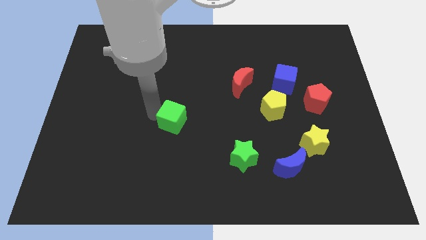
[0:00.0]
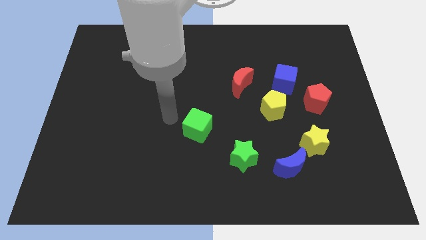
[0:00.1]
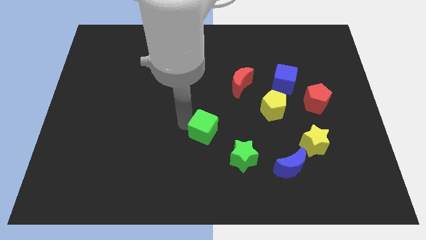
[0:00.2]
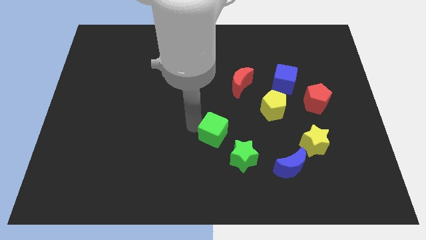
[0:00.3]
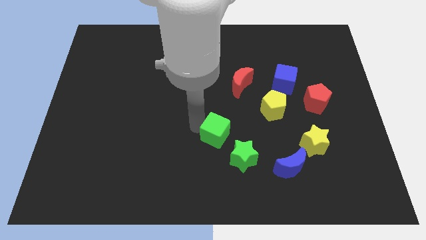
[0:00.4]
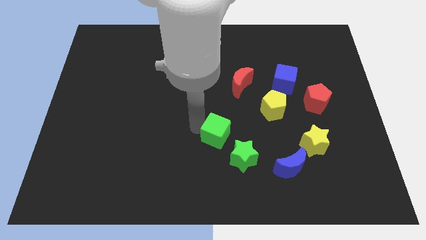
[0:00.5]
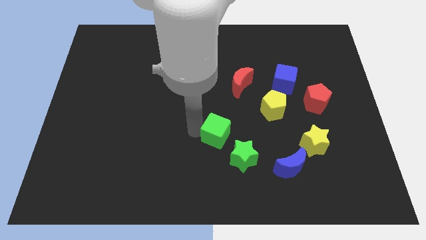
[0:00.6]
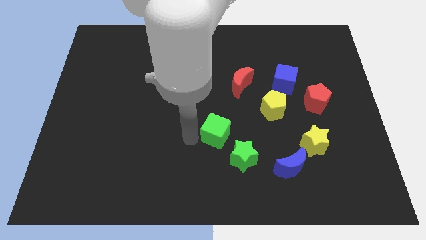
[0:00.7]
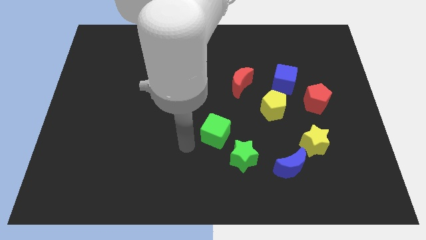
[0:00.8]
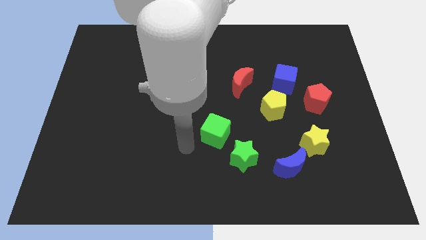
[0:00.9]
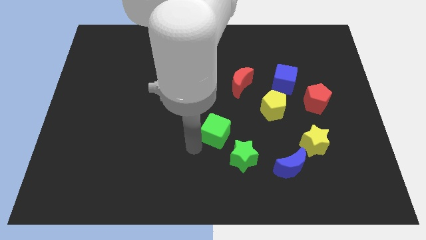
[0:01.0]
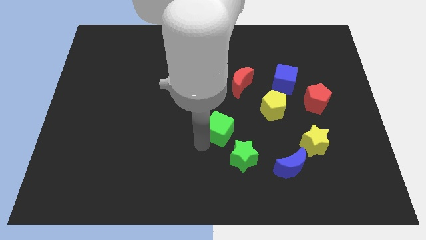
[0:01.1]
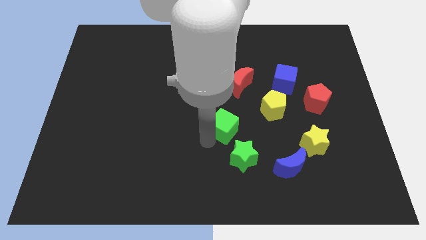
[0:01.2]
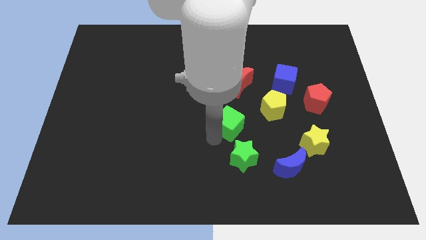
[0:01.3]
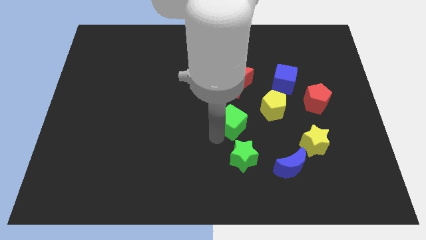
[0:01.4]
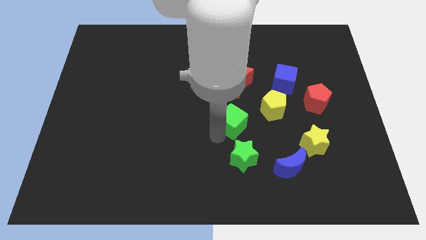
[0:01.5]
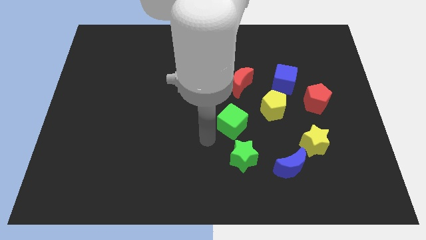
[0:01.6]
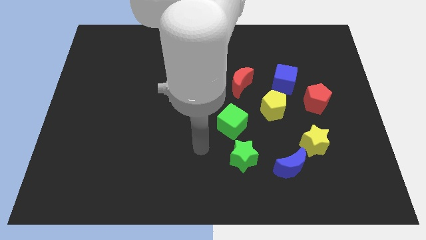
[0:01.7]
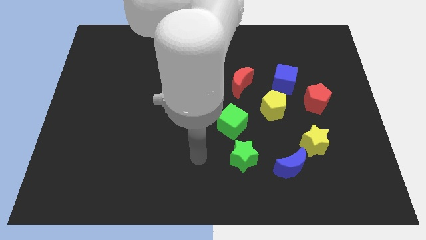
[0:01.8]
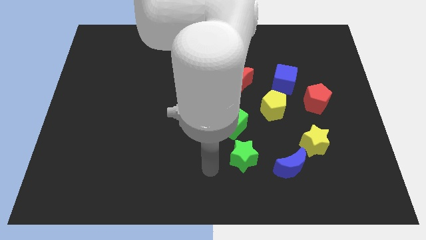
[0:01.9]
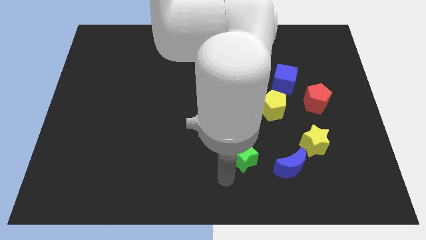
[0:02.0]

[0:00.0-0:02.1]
place the green cube above the green star

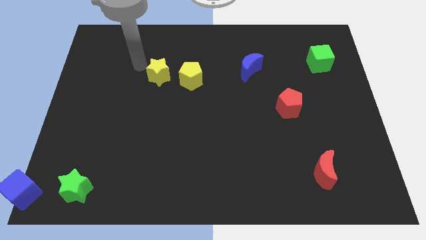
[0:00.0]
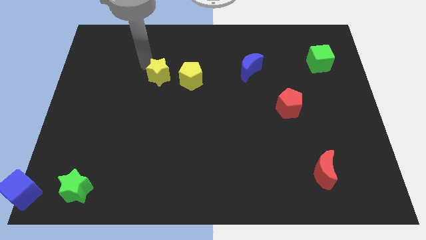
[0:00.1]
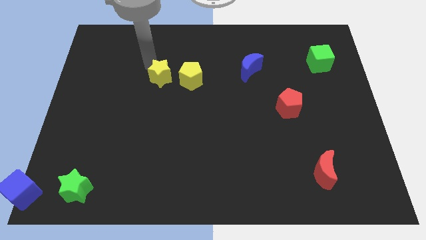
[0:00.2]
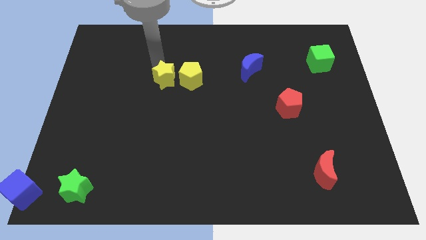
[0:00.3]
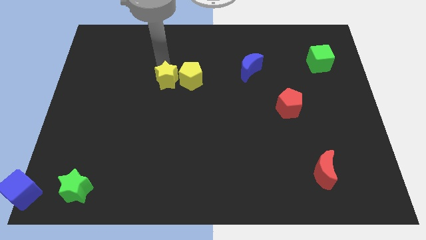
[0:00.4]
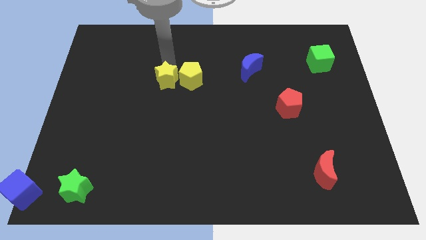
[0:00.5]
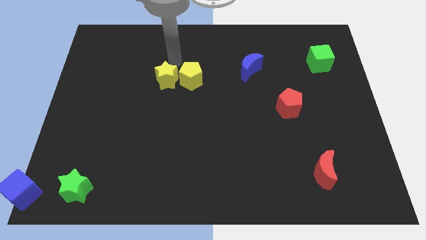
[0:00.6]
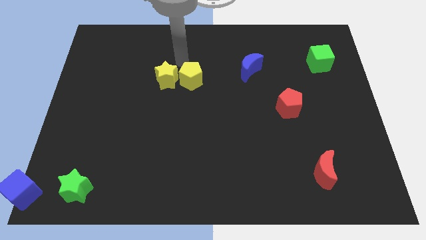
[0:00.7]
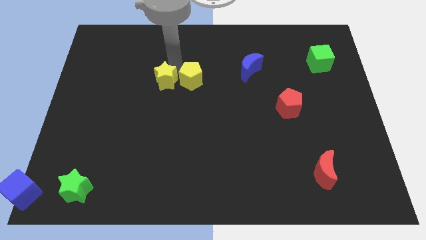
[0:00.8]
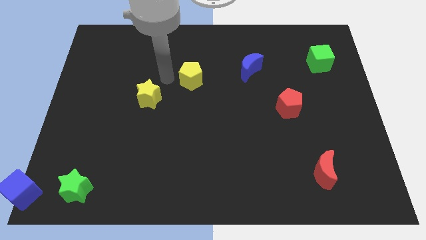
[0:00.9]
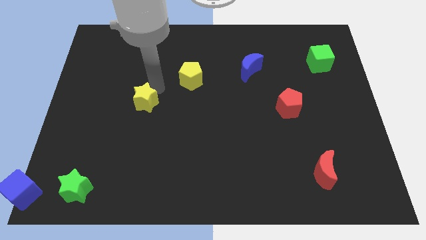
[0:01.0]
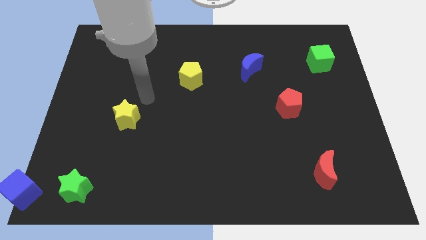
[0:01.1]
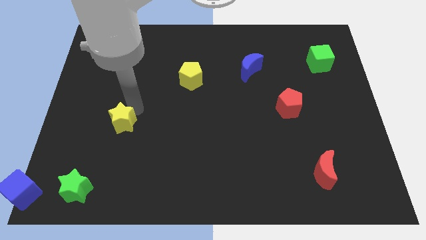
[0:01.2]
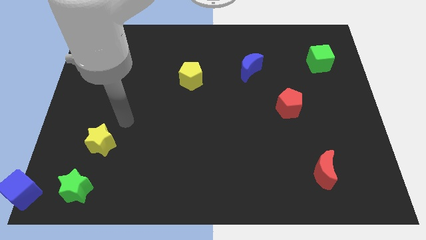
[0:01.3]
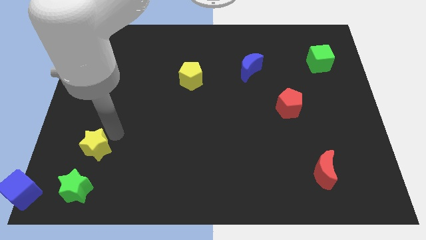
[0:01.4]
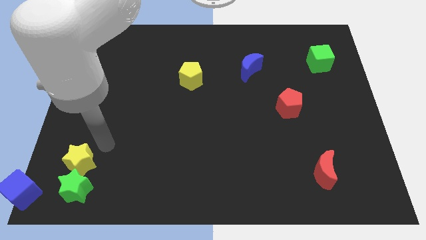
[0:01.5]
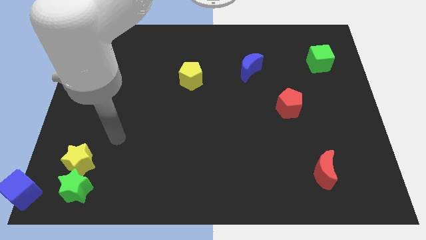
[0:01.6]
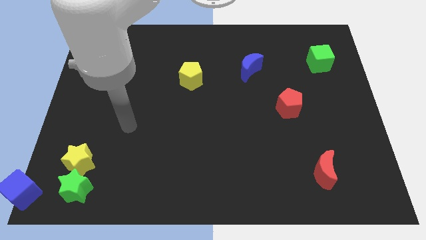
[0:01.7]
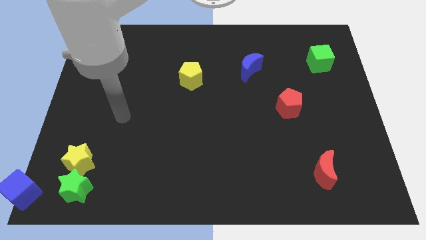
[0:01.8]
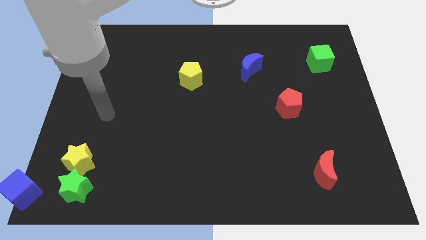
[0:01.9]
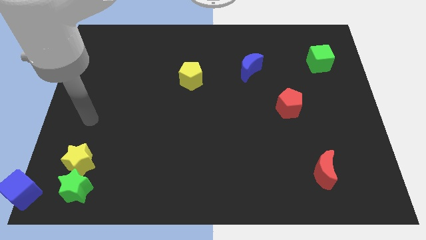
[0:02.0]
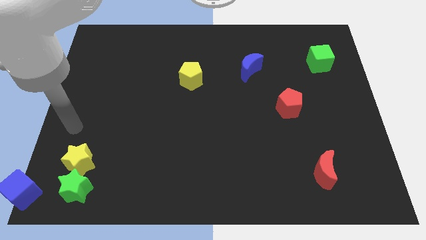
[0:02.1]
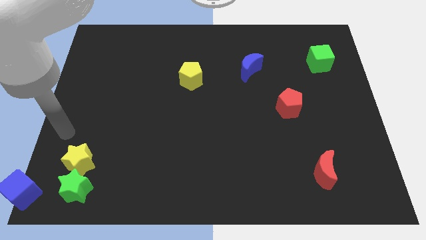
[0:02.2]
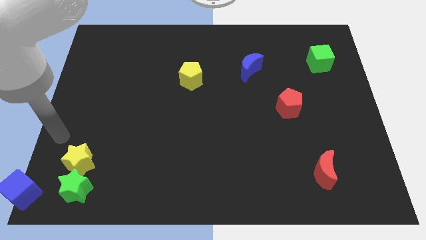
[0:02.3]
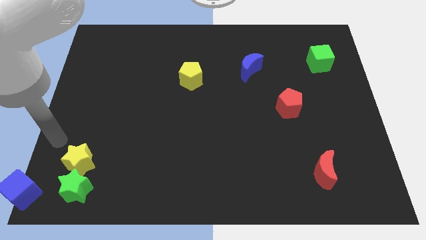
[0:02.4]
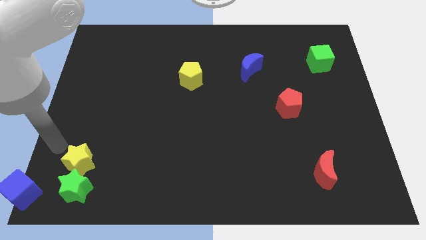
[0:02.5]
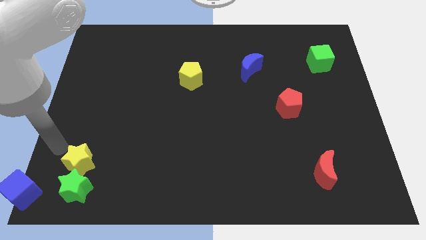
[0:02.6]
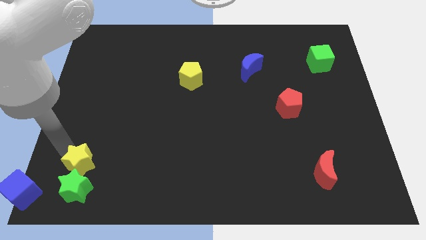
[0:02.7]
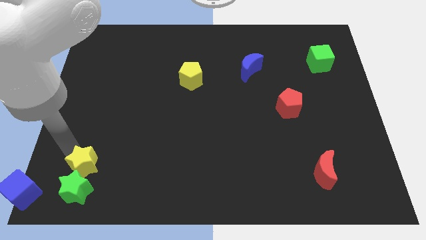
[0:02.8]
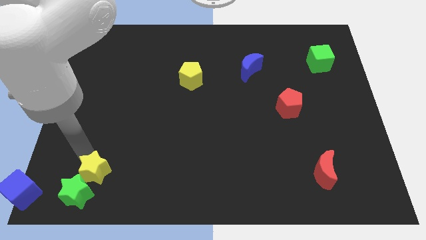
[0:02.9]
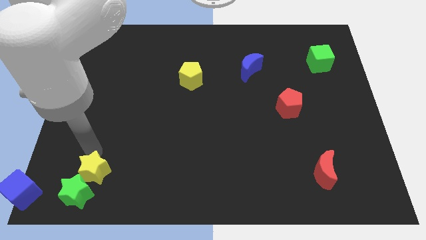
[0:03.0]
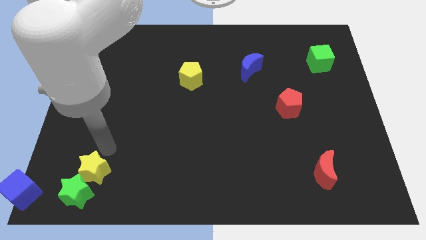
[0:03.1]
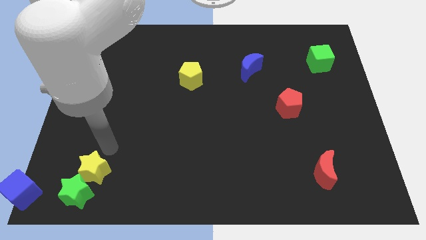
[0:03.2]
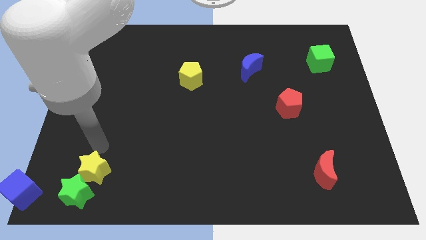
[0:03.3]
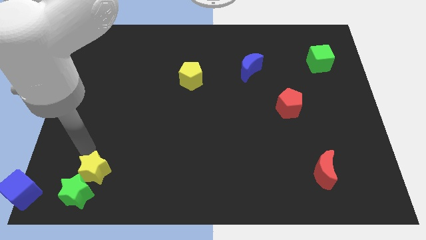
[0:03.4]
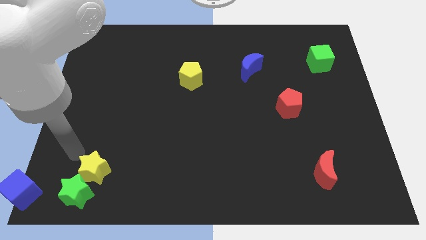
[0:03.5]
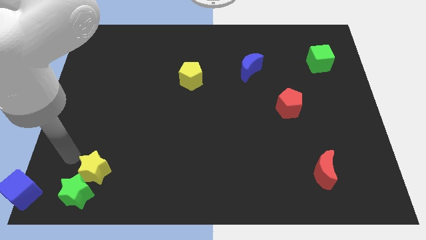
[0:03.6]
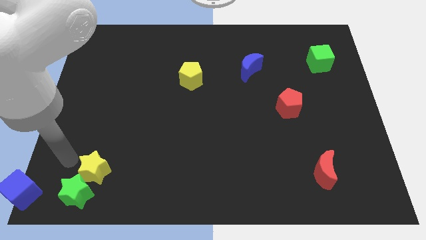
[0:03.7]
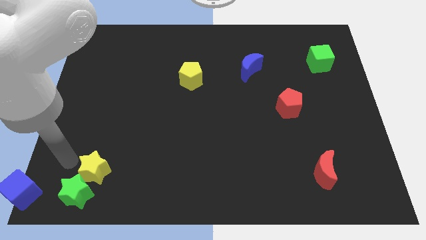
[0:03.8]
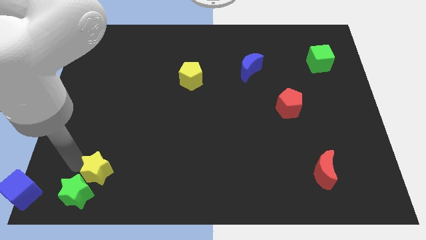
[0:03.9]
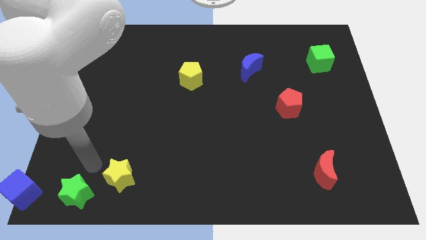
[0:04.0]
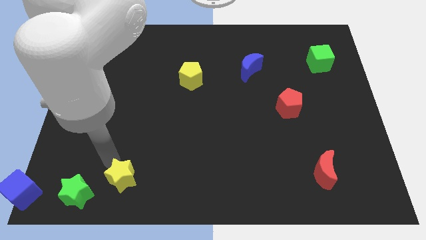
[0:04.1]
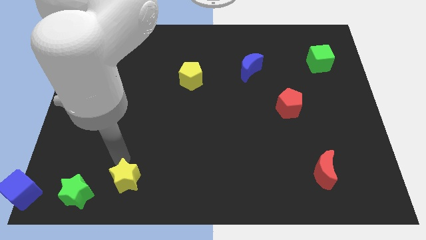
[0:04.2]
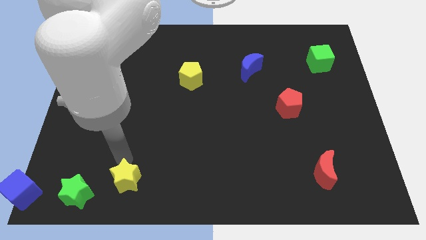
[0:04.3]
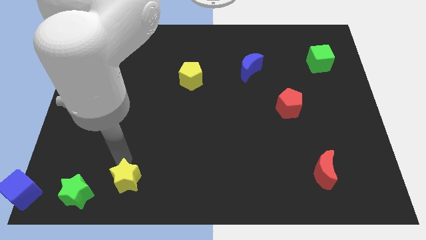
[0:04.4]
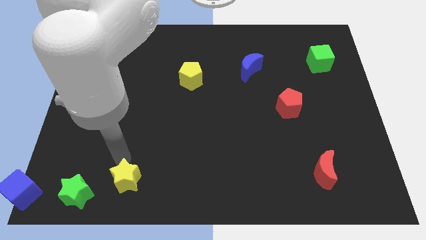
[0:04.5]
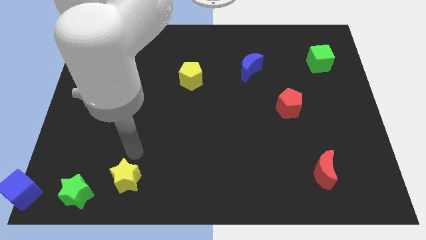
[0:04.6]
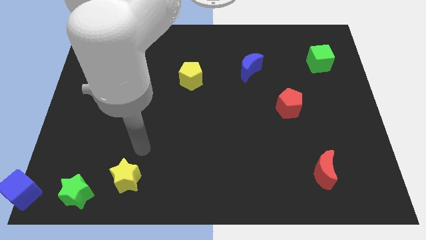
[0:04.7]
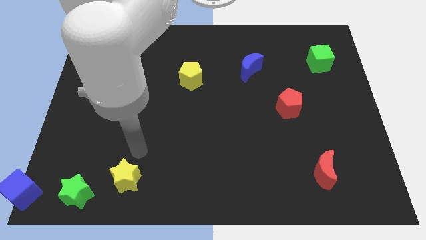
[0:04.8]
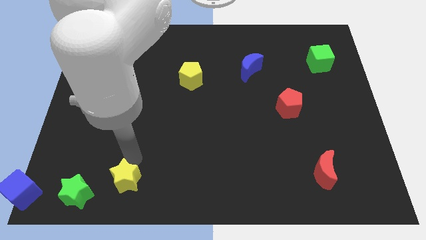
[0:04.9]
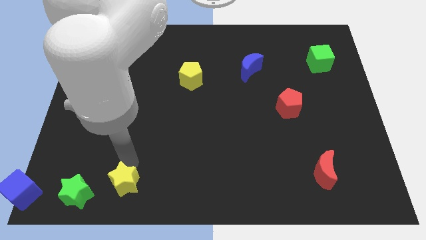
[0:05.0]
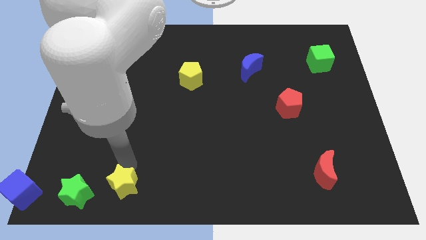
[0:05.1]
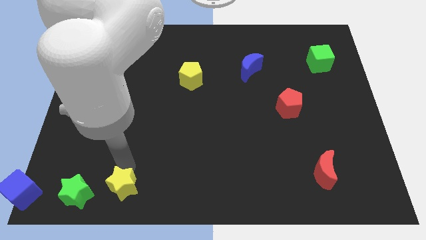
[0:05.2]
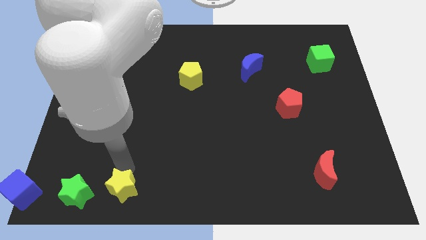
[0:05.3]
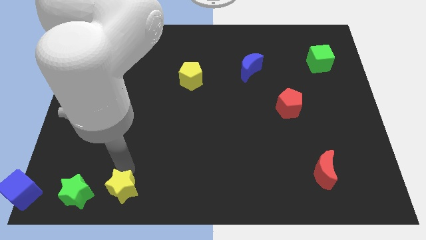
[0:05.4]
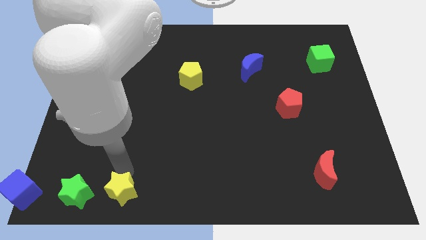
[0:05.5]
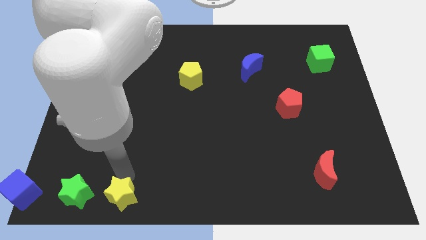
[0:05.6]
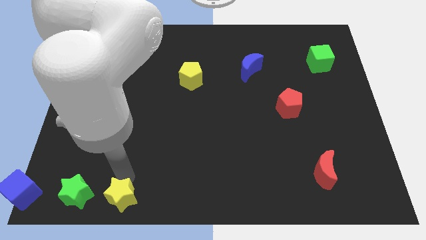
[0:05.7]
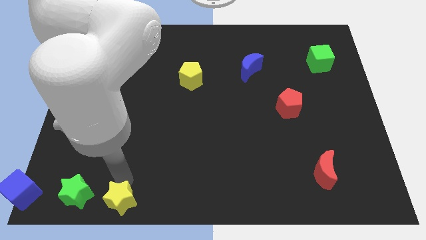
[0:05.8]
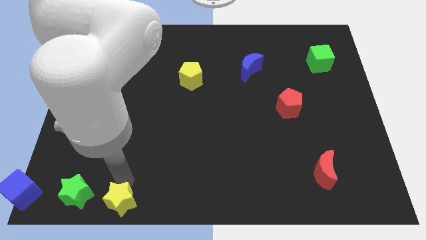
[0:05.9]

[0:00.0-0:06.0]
push the yellow star to the right side of the green star

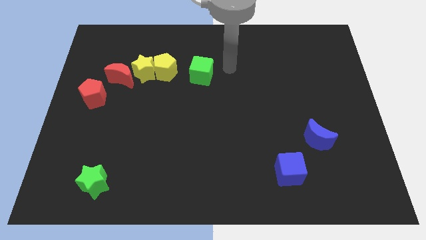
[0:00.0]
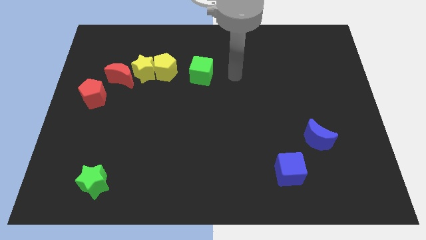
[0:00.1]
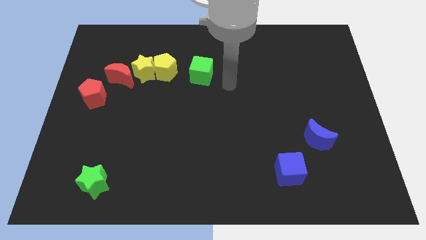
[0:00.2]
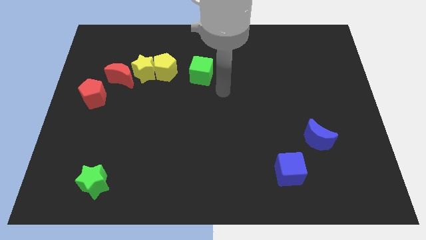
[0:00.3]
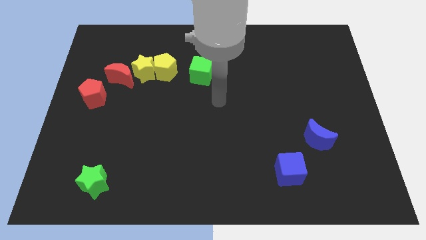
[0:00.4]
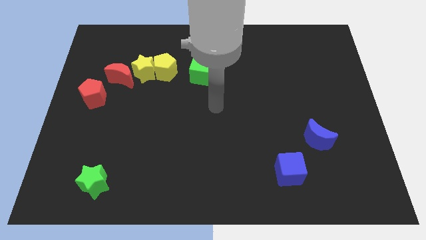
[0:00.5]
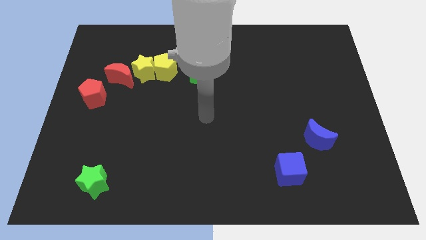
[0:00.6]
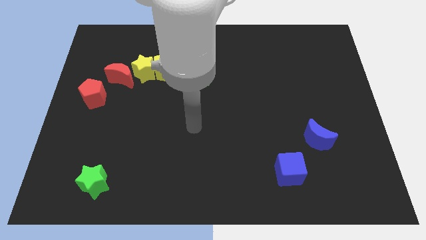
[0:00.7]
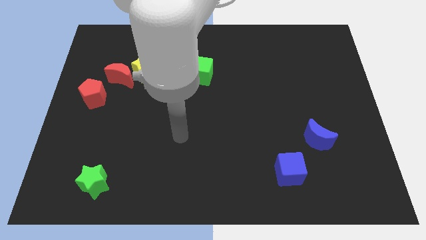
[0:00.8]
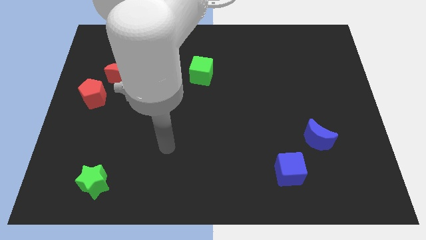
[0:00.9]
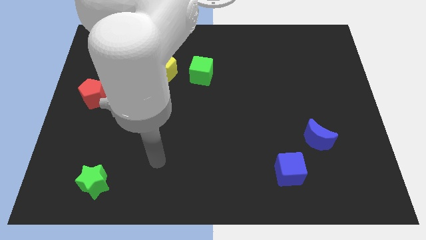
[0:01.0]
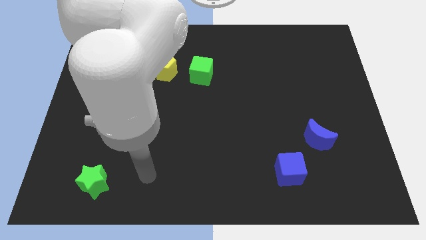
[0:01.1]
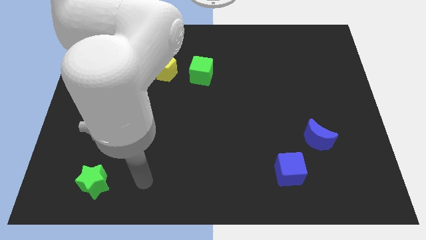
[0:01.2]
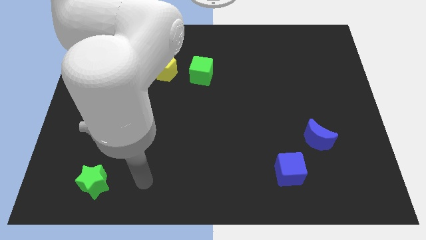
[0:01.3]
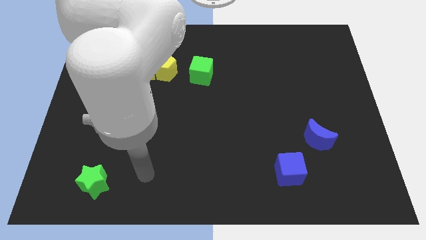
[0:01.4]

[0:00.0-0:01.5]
move your hand at the right side of the green star
